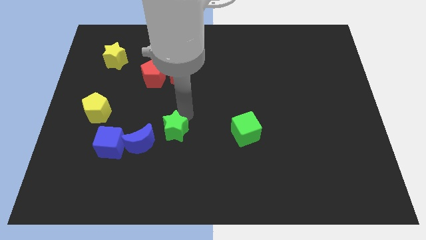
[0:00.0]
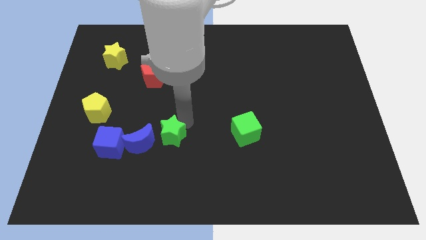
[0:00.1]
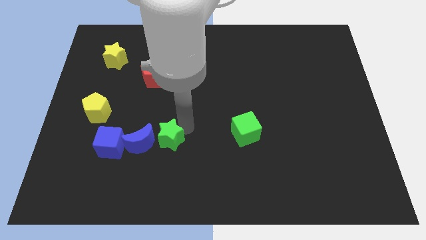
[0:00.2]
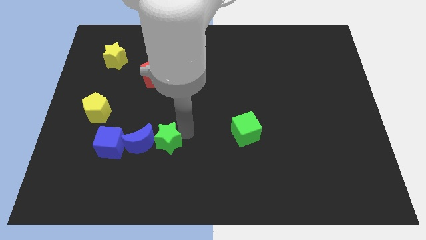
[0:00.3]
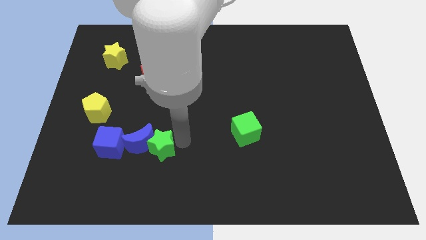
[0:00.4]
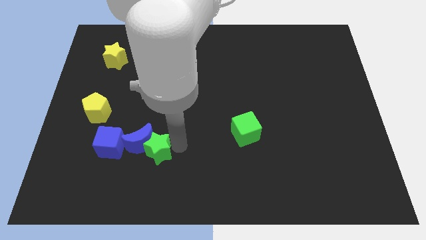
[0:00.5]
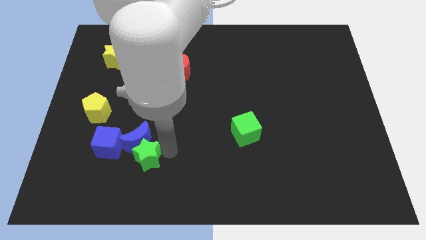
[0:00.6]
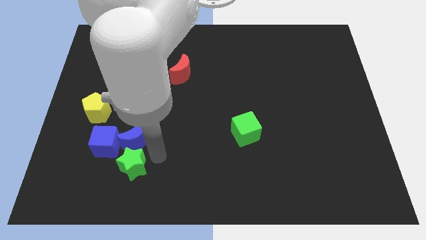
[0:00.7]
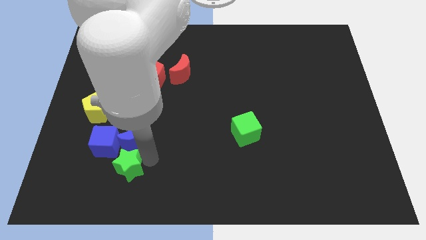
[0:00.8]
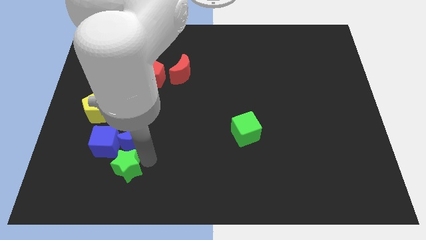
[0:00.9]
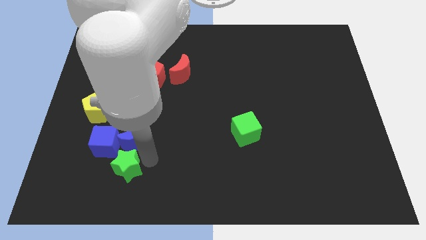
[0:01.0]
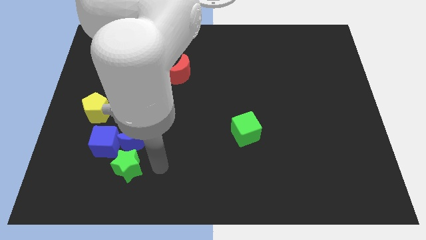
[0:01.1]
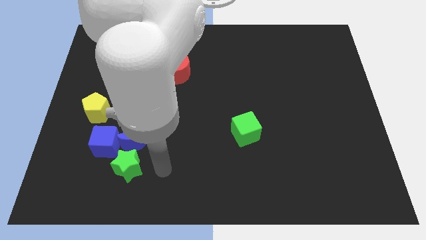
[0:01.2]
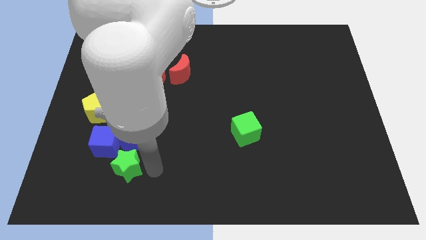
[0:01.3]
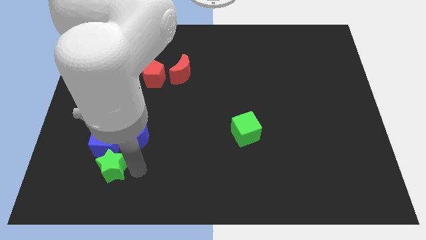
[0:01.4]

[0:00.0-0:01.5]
place the green star below the blue cube

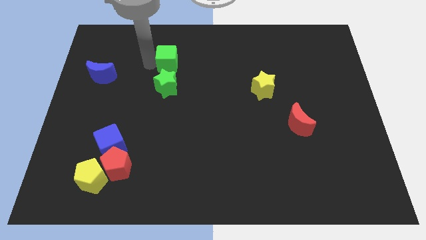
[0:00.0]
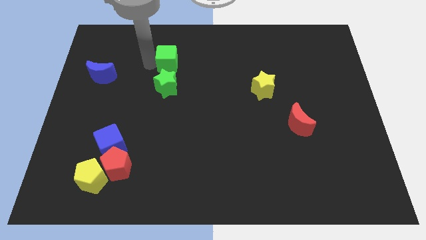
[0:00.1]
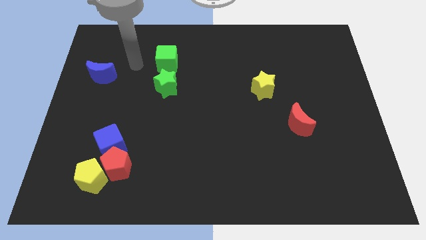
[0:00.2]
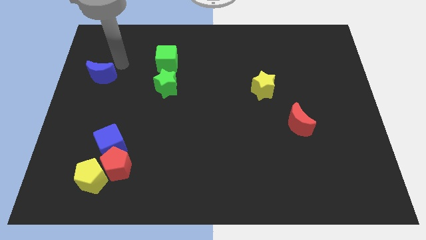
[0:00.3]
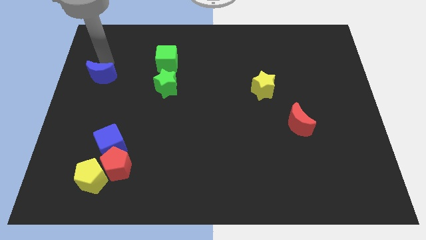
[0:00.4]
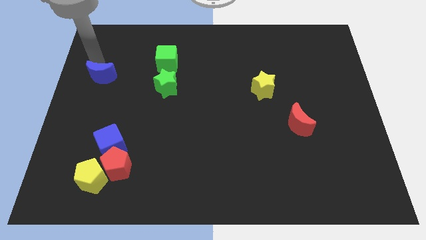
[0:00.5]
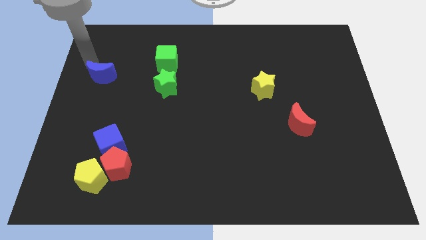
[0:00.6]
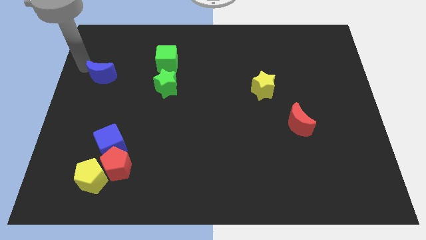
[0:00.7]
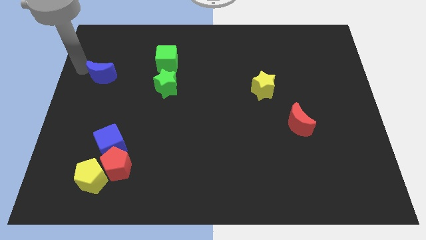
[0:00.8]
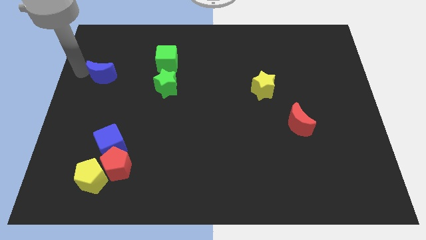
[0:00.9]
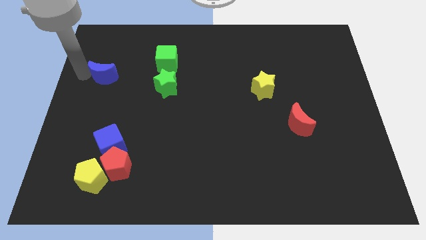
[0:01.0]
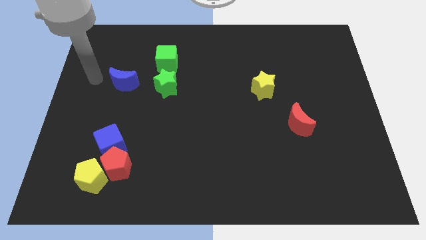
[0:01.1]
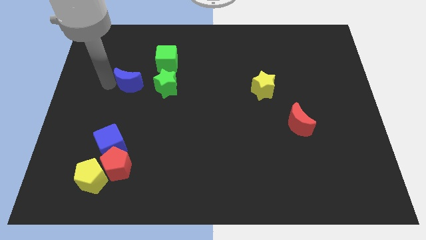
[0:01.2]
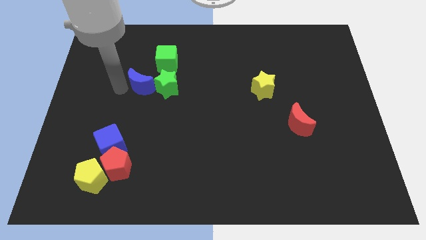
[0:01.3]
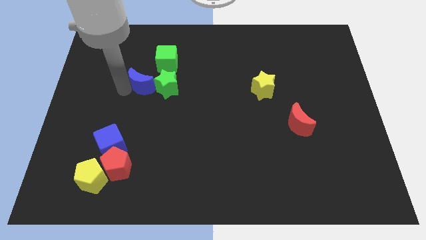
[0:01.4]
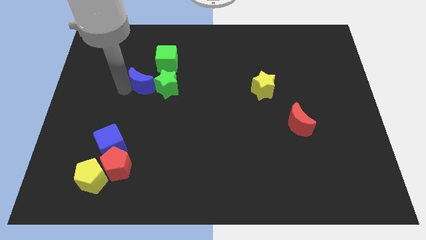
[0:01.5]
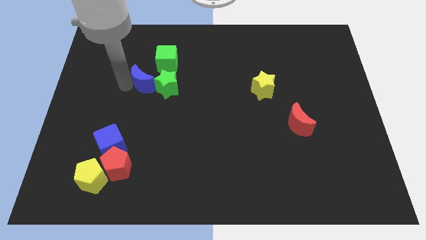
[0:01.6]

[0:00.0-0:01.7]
push blue crescent into green star

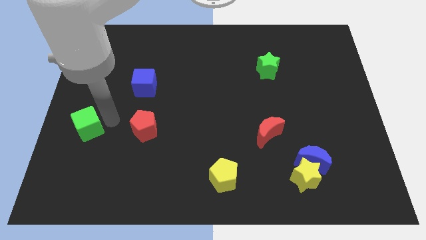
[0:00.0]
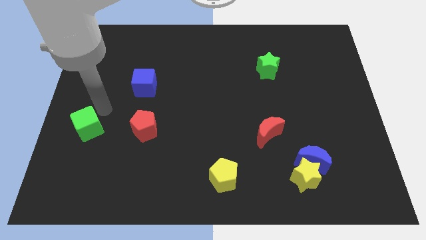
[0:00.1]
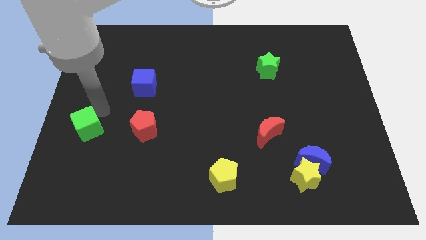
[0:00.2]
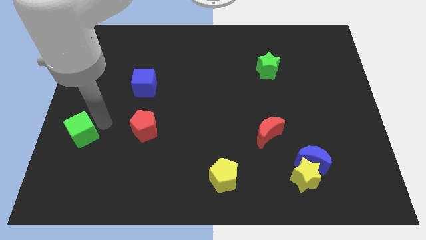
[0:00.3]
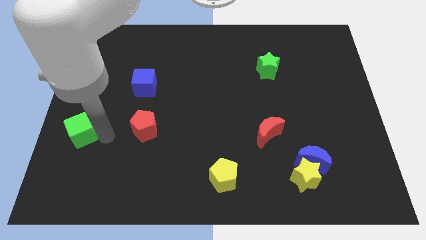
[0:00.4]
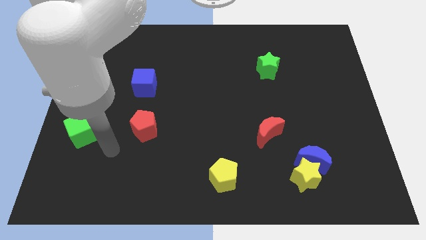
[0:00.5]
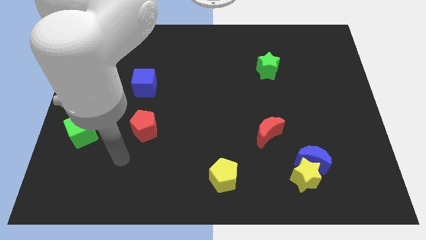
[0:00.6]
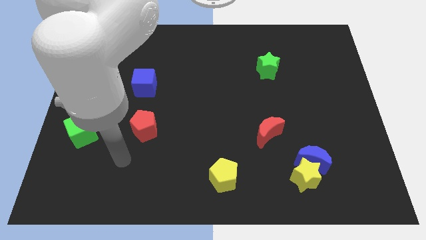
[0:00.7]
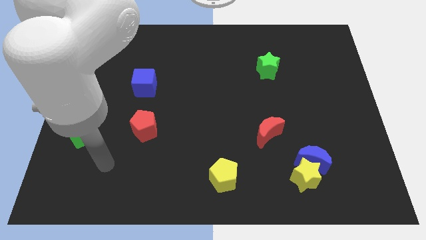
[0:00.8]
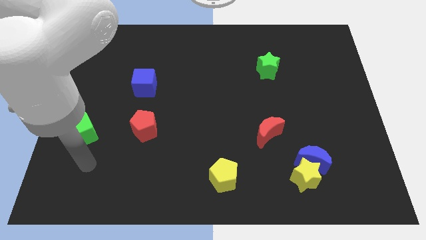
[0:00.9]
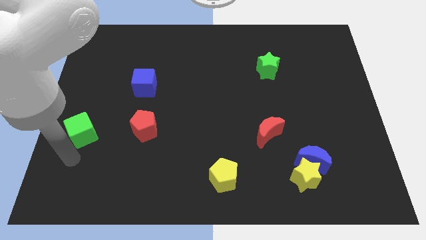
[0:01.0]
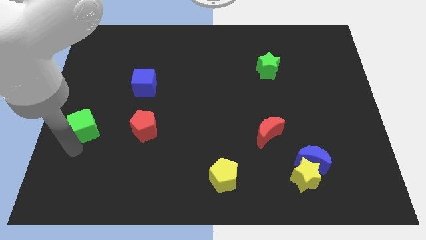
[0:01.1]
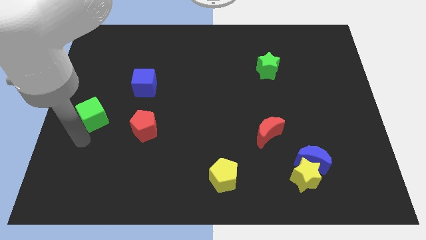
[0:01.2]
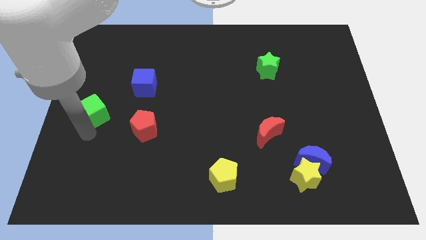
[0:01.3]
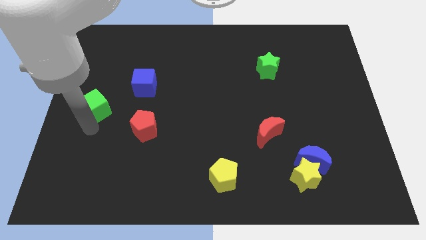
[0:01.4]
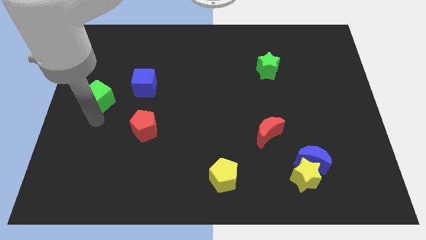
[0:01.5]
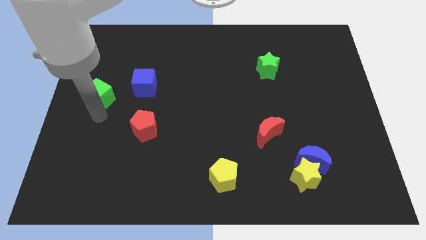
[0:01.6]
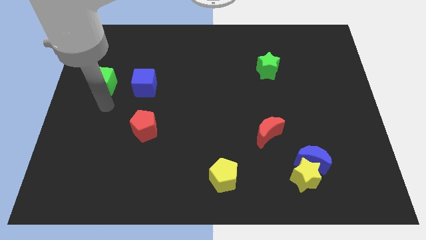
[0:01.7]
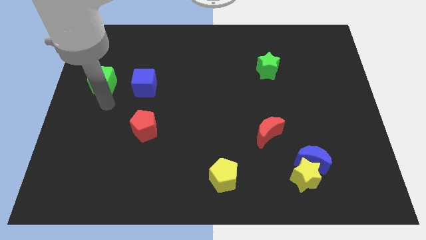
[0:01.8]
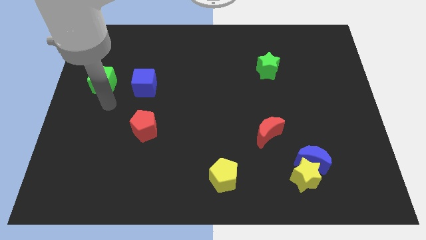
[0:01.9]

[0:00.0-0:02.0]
move the green cube to the left of the blue cube

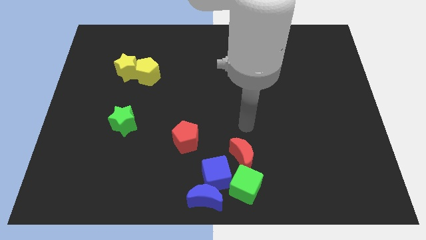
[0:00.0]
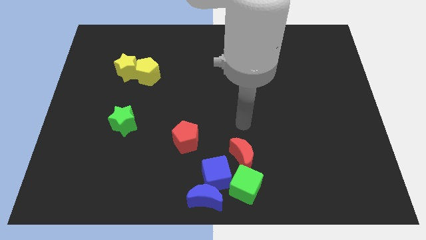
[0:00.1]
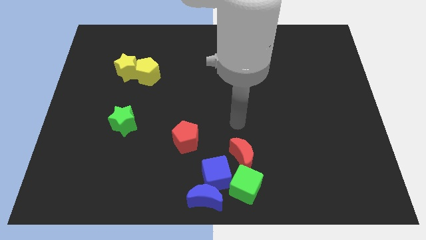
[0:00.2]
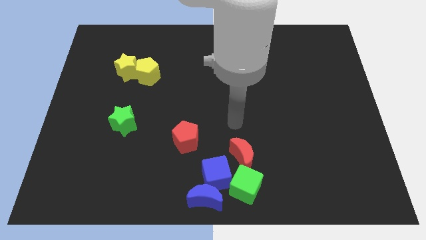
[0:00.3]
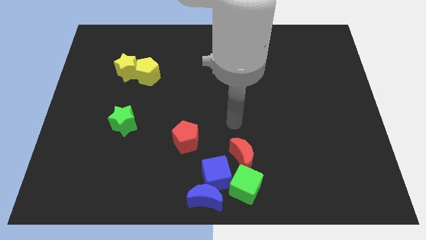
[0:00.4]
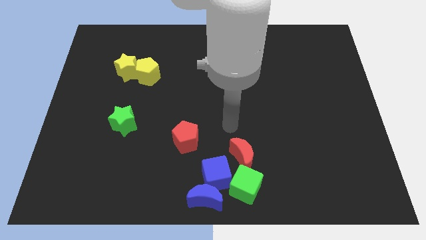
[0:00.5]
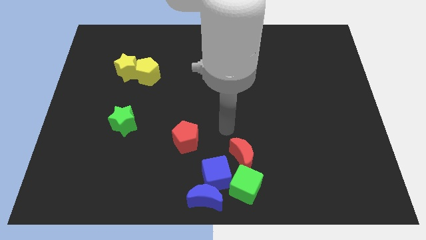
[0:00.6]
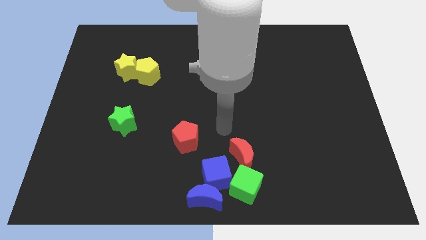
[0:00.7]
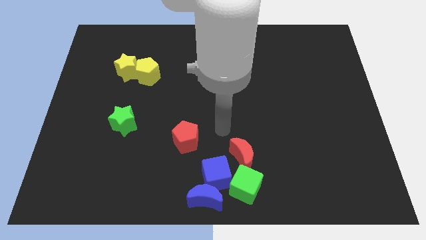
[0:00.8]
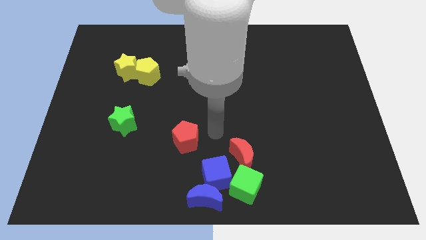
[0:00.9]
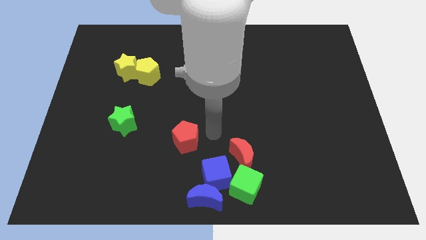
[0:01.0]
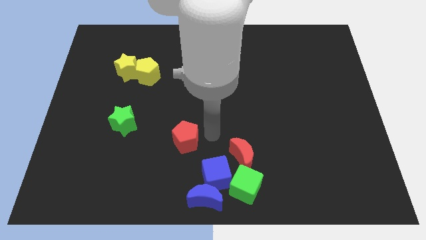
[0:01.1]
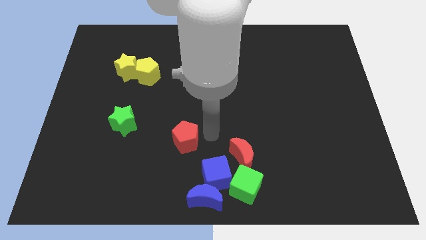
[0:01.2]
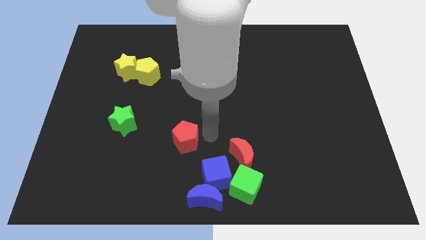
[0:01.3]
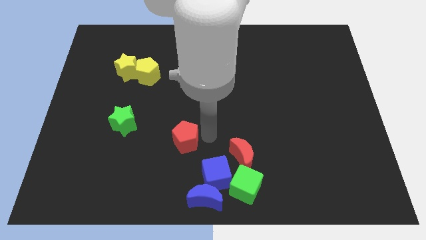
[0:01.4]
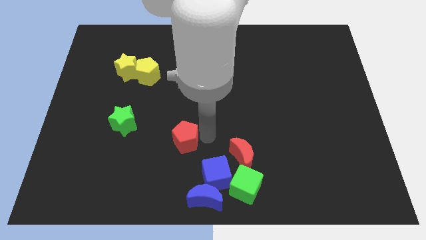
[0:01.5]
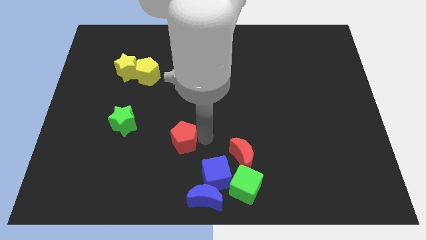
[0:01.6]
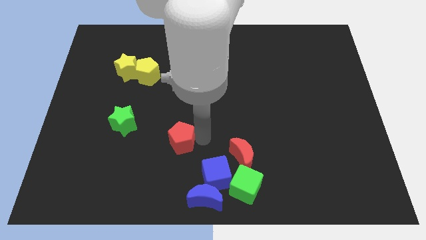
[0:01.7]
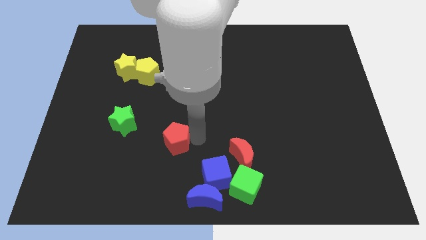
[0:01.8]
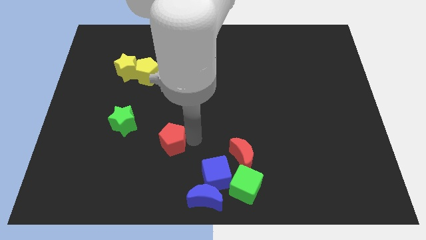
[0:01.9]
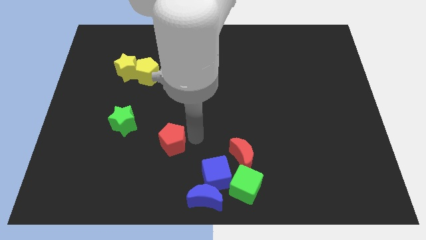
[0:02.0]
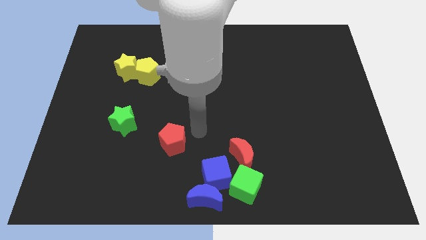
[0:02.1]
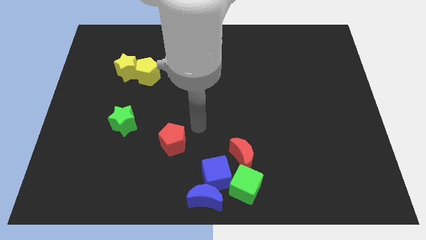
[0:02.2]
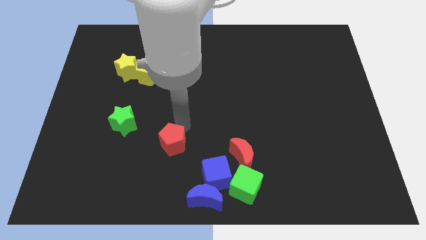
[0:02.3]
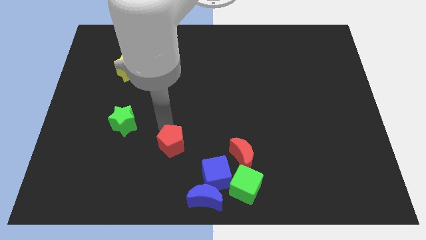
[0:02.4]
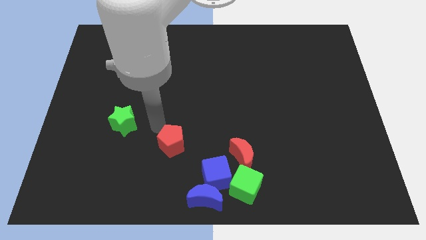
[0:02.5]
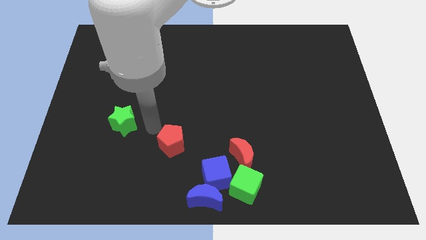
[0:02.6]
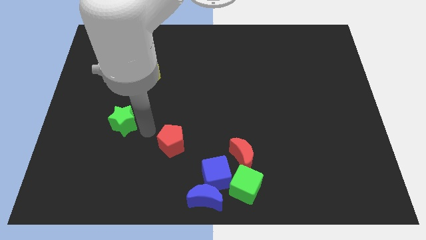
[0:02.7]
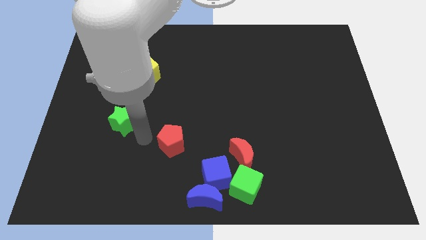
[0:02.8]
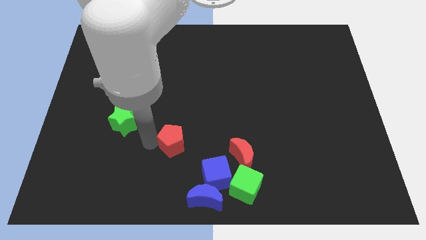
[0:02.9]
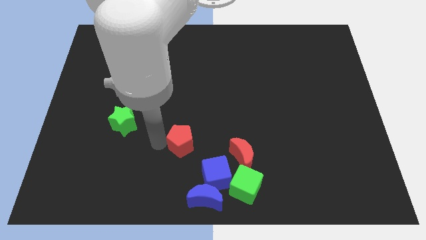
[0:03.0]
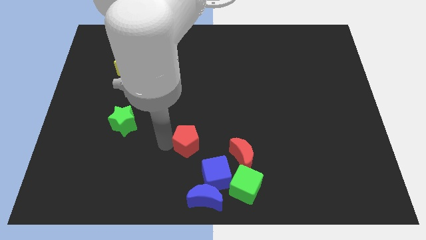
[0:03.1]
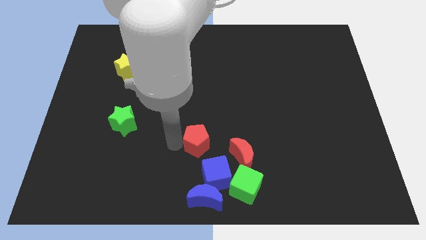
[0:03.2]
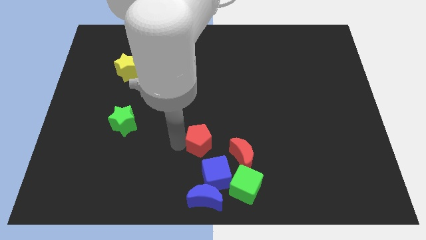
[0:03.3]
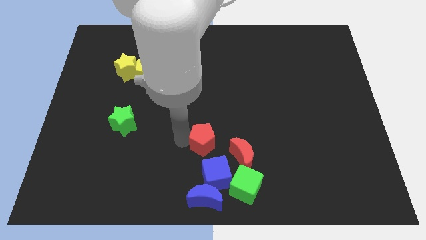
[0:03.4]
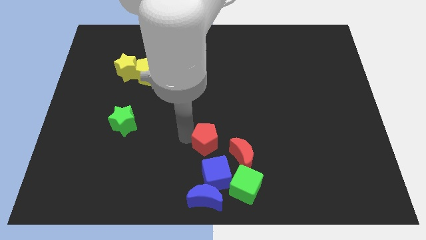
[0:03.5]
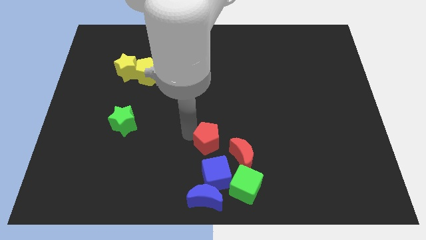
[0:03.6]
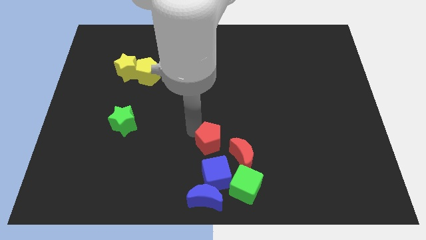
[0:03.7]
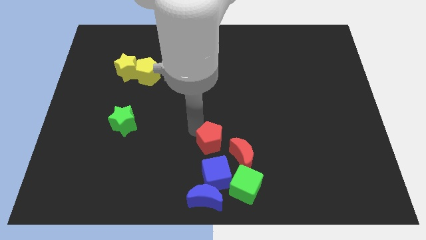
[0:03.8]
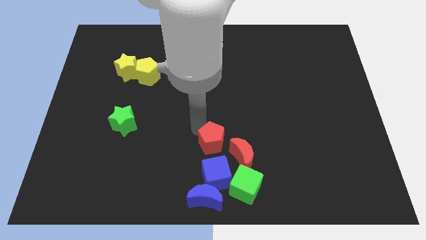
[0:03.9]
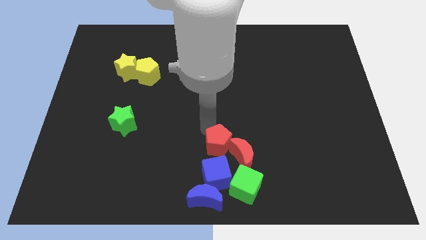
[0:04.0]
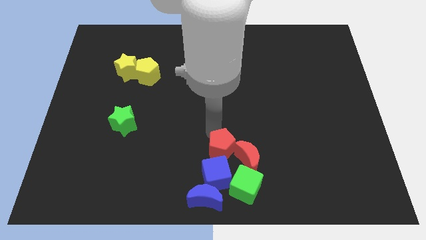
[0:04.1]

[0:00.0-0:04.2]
push the red pentagon into the red crescent
